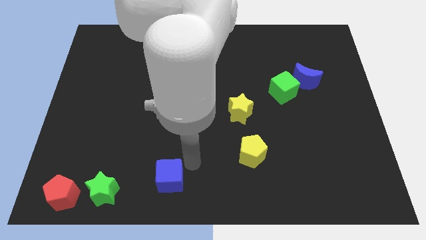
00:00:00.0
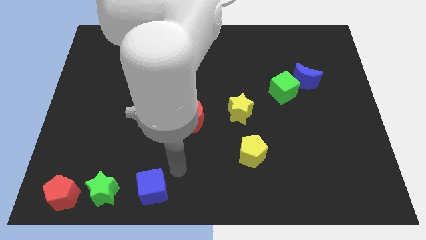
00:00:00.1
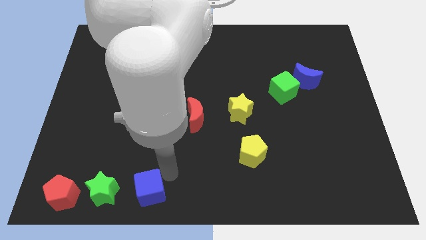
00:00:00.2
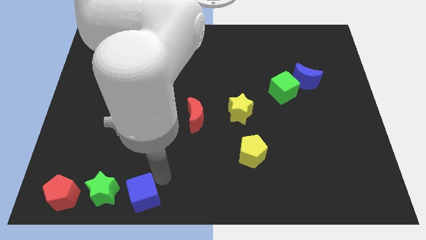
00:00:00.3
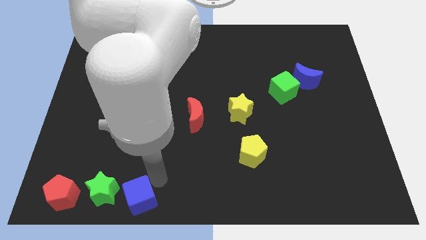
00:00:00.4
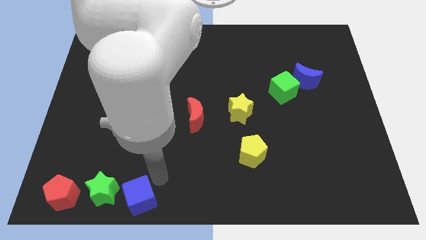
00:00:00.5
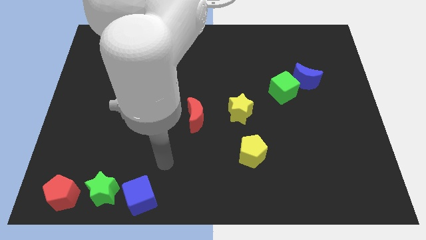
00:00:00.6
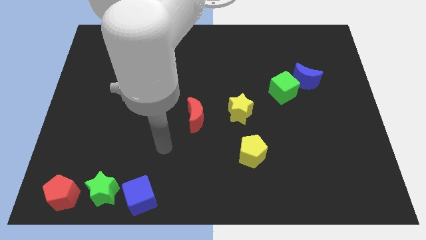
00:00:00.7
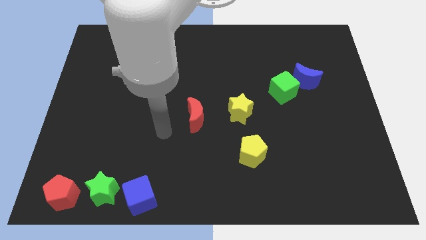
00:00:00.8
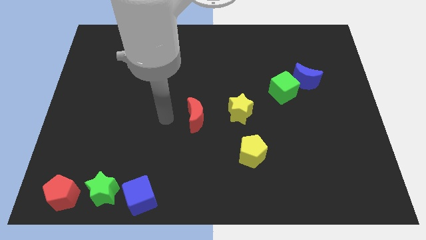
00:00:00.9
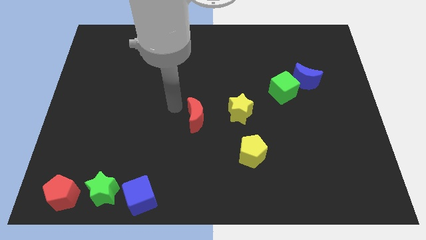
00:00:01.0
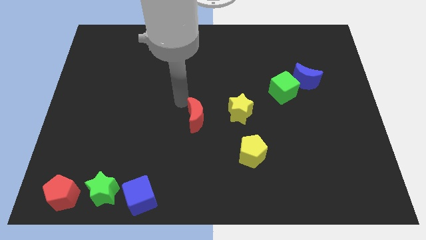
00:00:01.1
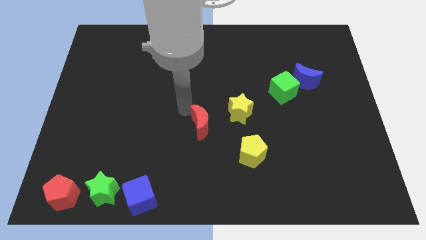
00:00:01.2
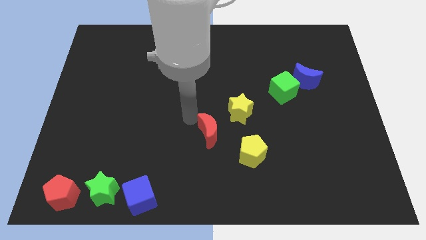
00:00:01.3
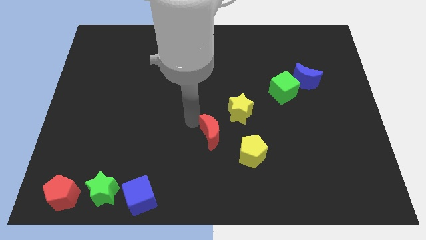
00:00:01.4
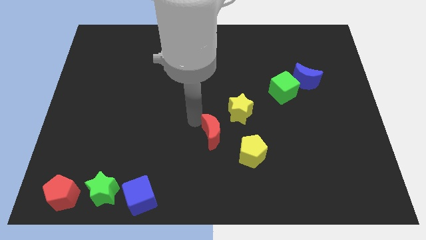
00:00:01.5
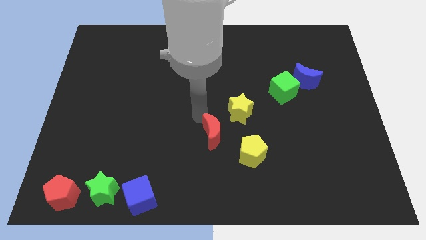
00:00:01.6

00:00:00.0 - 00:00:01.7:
slide the blue block towards the green star

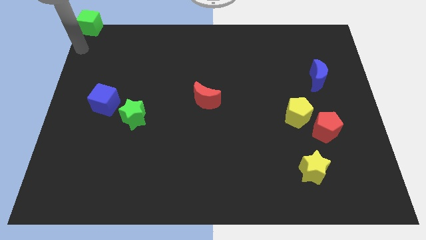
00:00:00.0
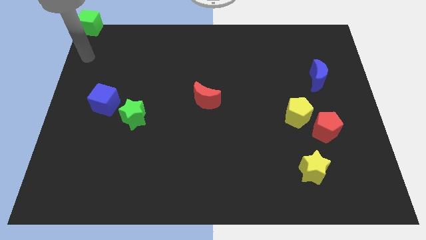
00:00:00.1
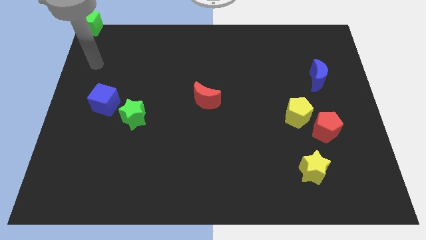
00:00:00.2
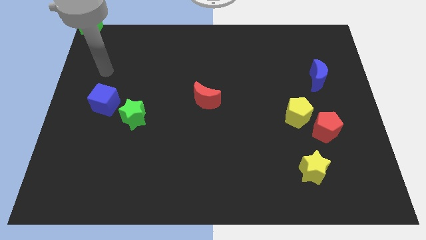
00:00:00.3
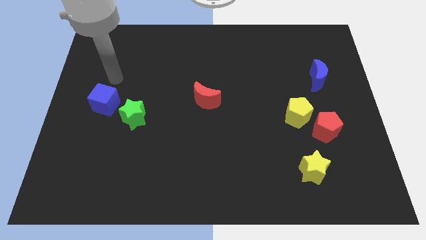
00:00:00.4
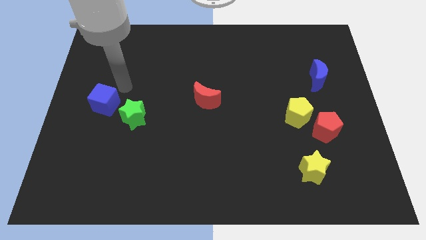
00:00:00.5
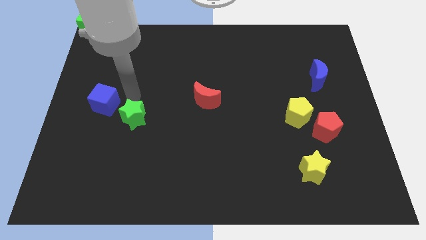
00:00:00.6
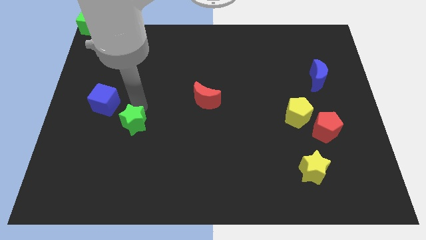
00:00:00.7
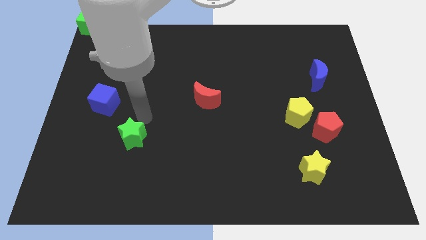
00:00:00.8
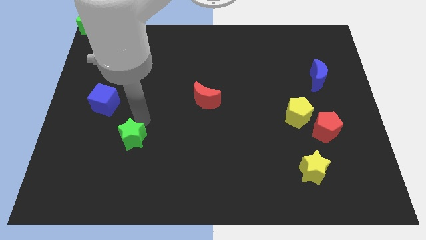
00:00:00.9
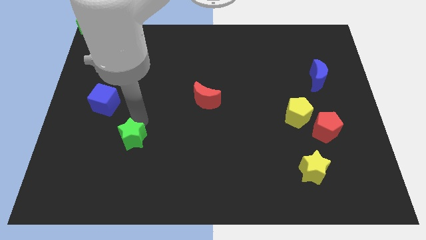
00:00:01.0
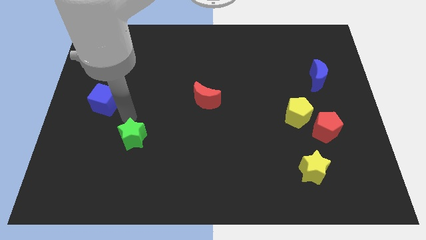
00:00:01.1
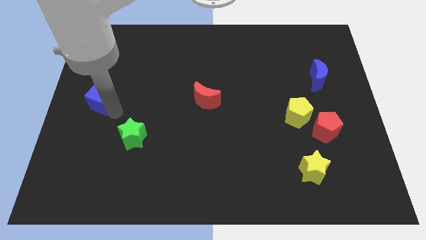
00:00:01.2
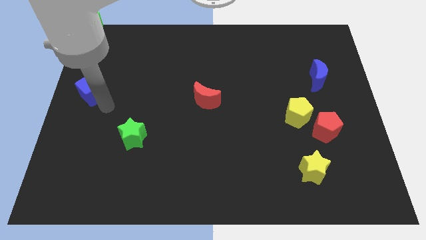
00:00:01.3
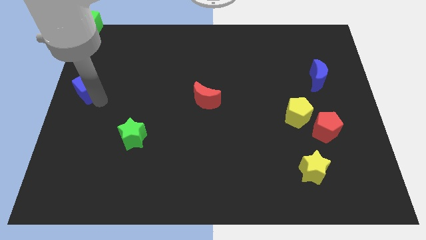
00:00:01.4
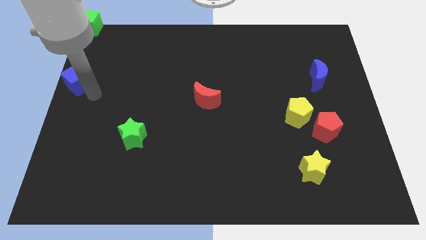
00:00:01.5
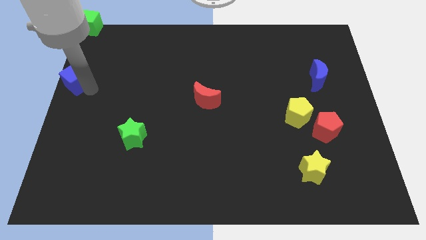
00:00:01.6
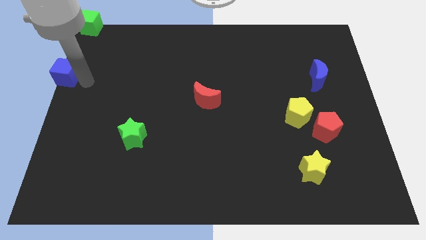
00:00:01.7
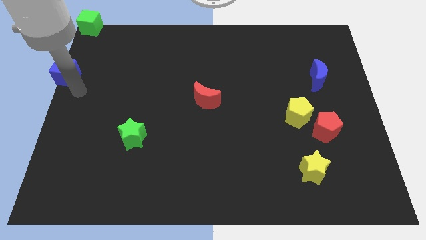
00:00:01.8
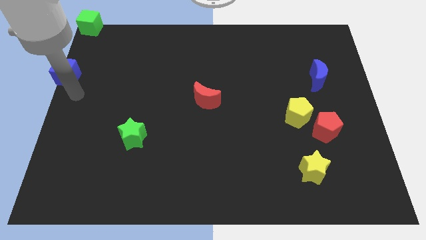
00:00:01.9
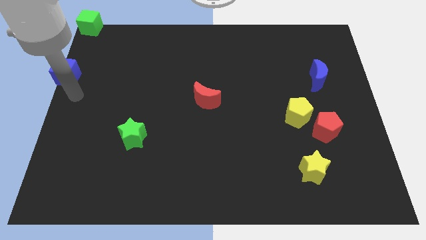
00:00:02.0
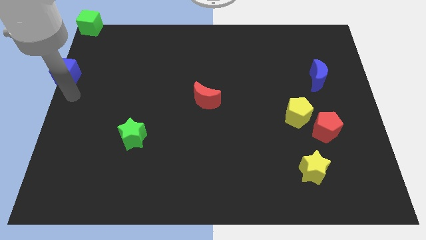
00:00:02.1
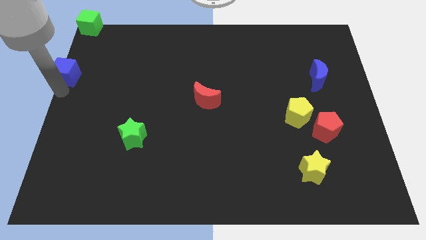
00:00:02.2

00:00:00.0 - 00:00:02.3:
separate the green star and blue cube

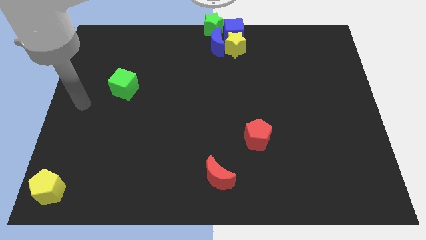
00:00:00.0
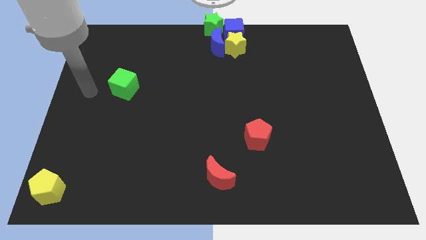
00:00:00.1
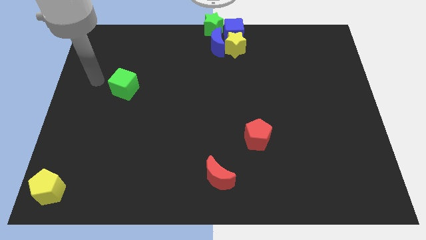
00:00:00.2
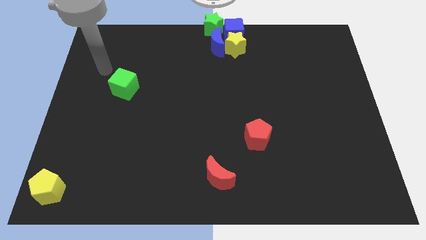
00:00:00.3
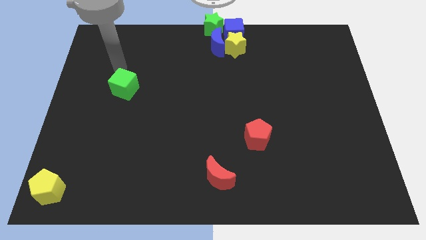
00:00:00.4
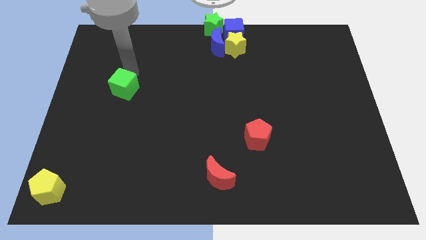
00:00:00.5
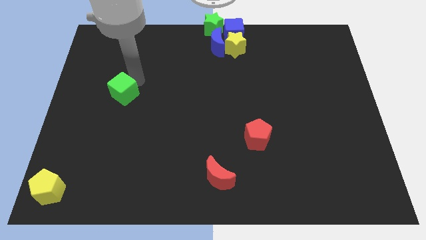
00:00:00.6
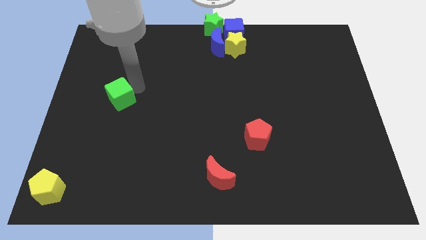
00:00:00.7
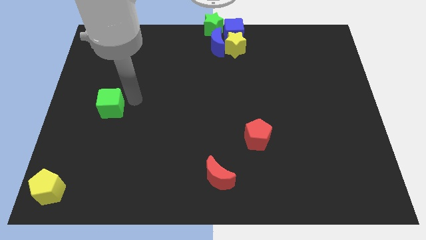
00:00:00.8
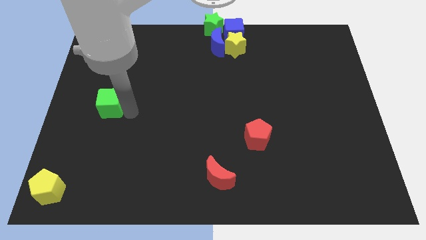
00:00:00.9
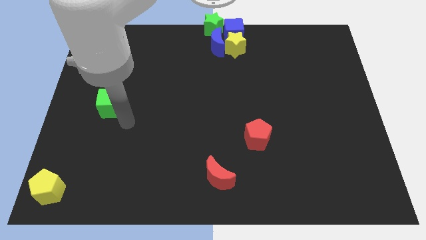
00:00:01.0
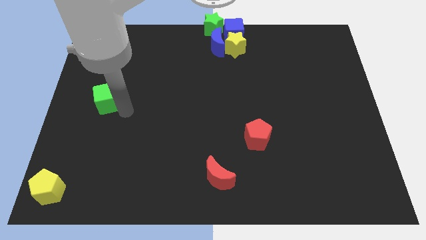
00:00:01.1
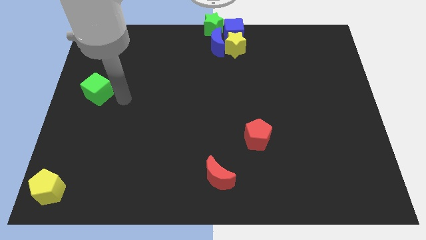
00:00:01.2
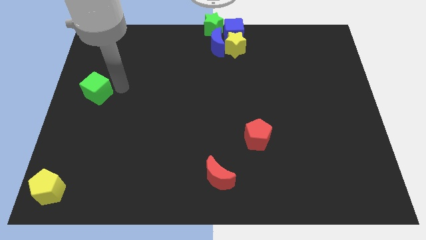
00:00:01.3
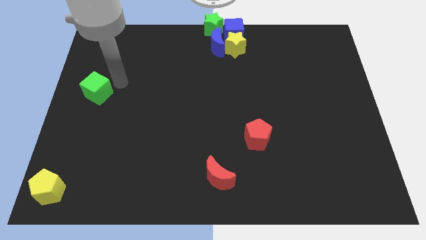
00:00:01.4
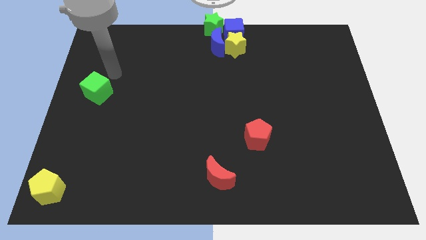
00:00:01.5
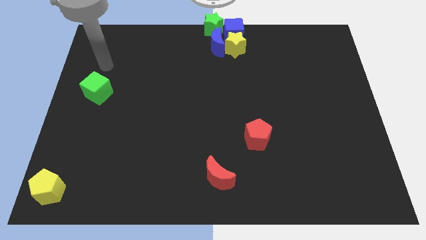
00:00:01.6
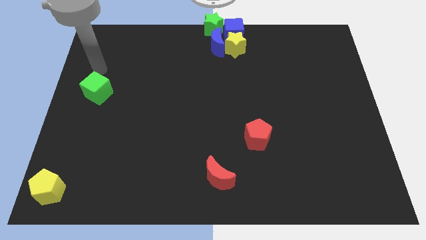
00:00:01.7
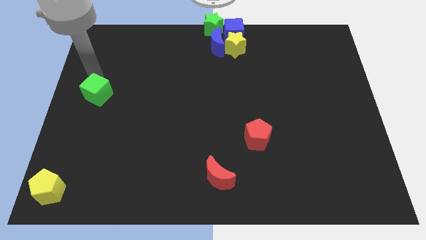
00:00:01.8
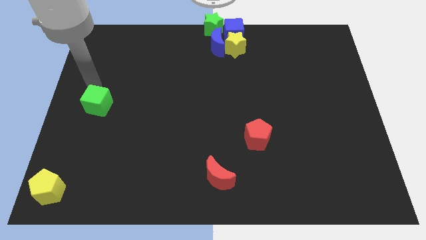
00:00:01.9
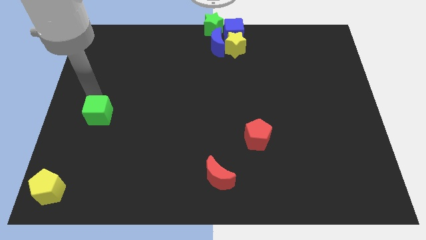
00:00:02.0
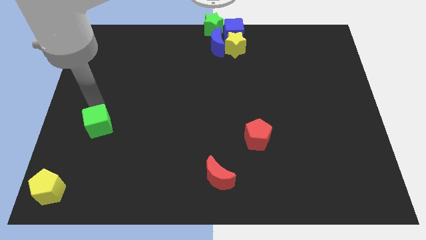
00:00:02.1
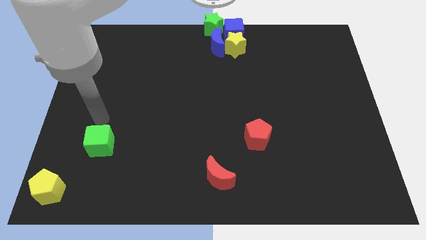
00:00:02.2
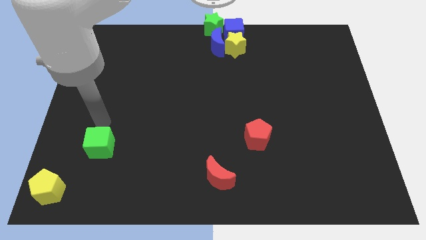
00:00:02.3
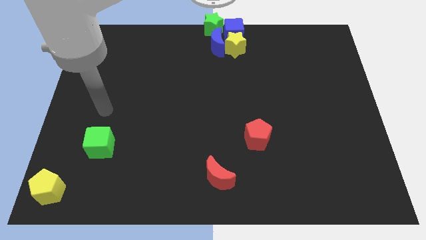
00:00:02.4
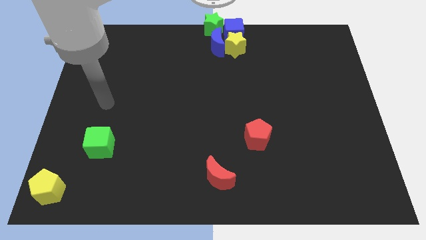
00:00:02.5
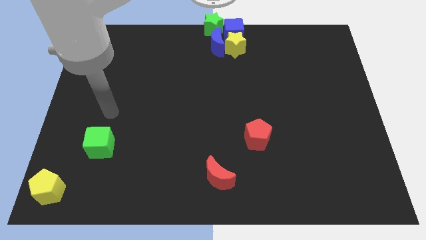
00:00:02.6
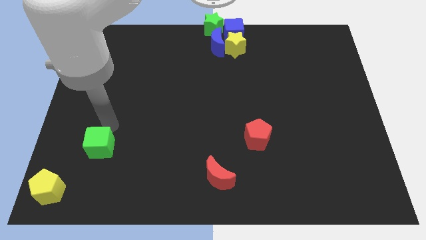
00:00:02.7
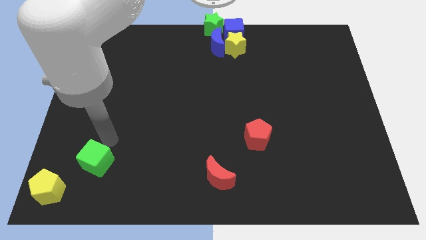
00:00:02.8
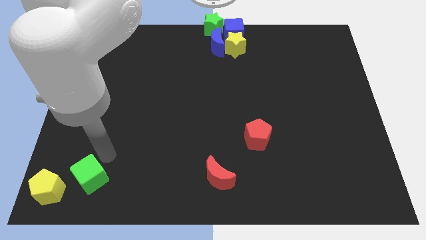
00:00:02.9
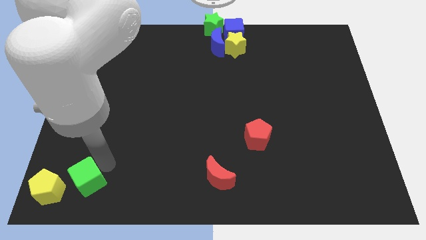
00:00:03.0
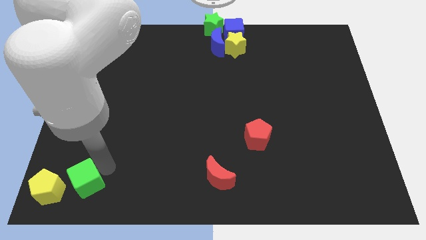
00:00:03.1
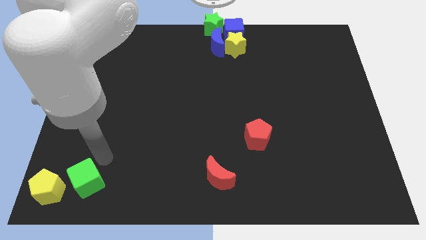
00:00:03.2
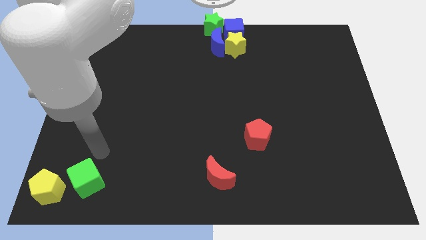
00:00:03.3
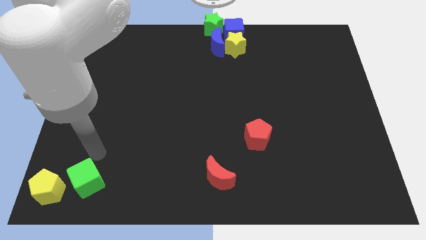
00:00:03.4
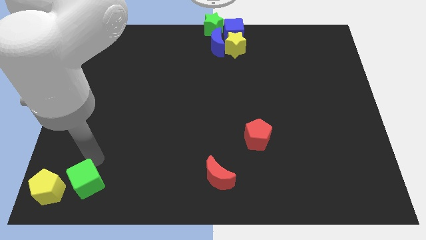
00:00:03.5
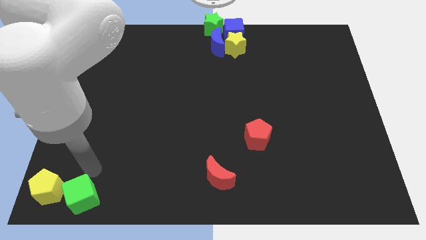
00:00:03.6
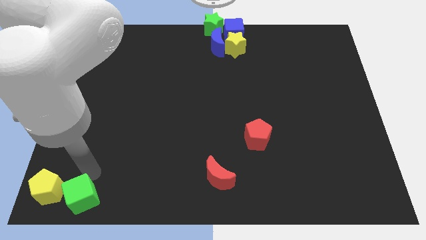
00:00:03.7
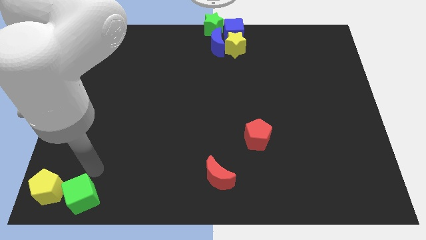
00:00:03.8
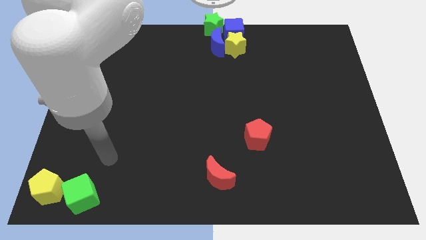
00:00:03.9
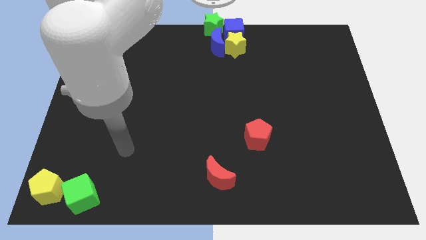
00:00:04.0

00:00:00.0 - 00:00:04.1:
push the green cube close to the yellow pentagon

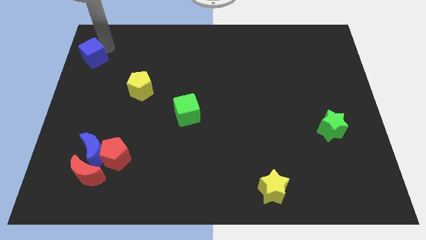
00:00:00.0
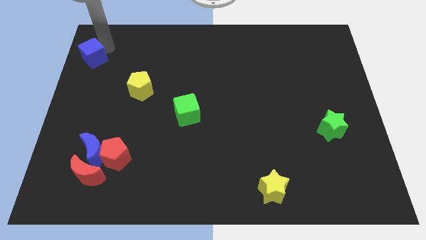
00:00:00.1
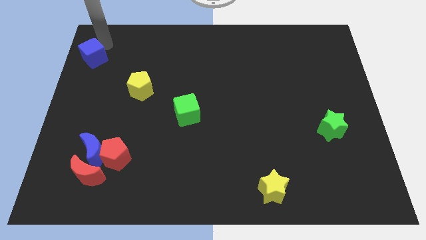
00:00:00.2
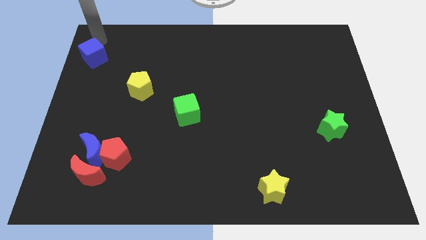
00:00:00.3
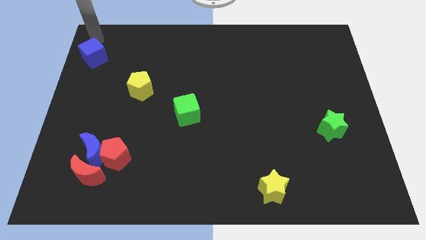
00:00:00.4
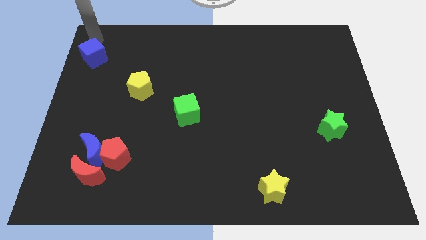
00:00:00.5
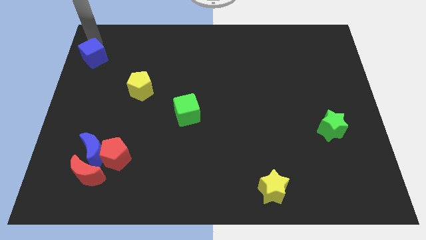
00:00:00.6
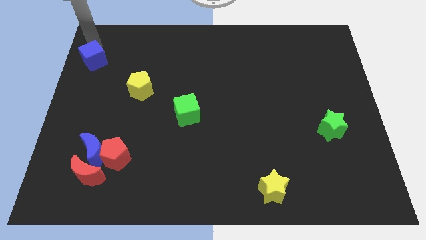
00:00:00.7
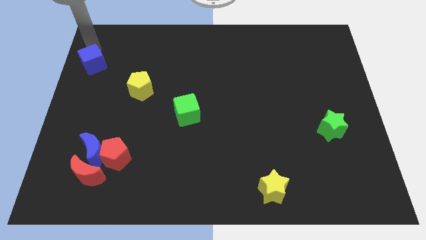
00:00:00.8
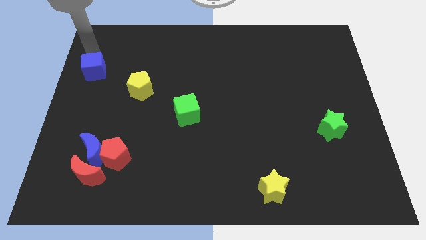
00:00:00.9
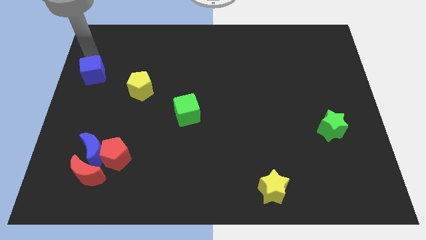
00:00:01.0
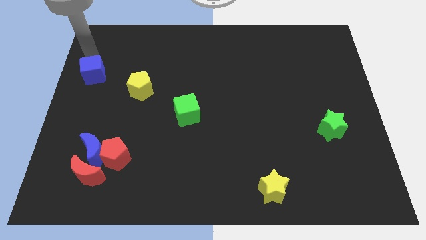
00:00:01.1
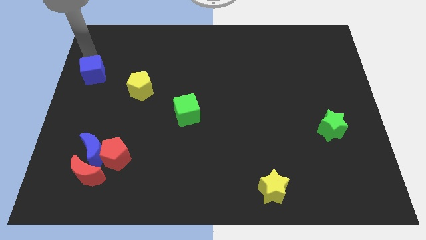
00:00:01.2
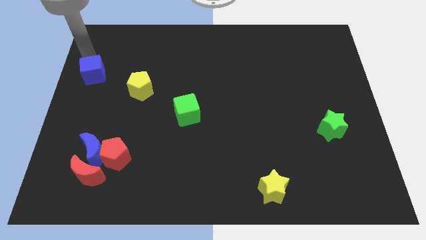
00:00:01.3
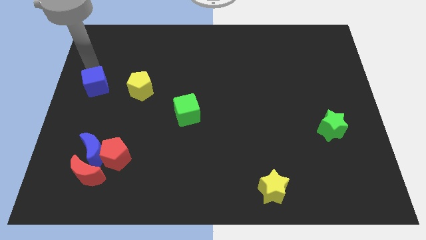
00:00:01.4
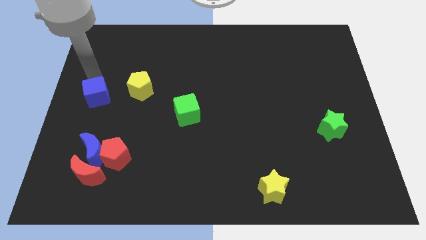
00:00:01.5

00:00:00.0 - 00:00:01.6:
move the blue cube to the left side of the yellow pentagon
